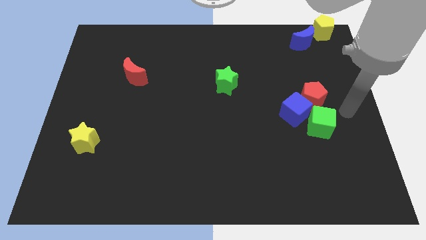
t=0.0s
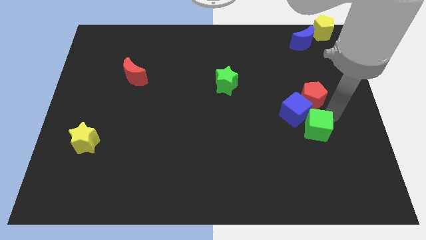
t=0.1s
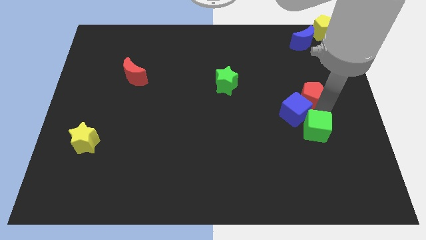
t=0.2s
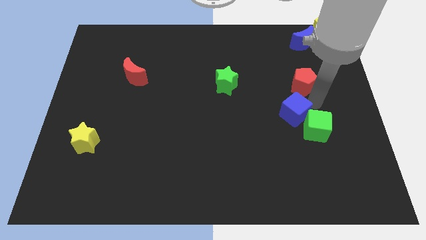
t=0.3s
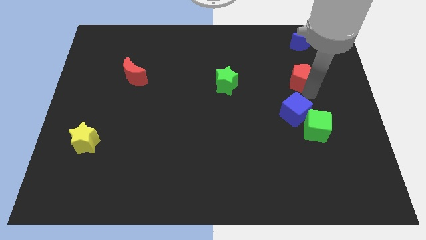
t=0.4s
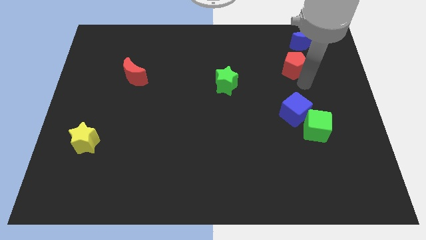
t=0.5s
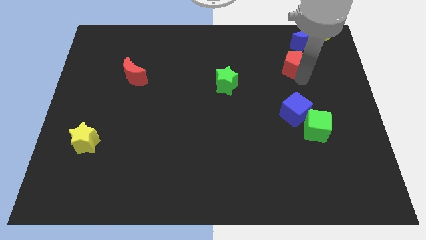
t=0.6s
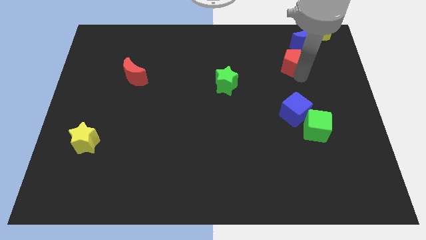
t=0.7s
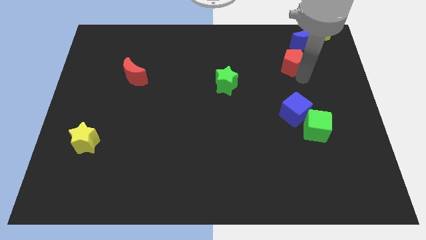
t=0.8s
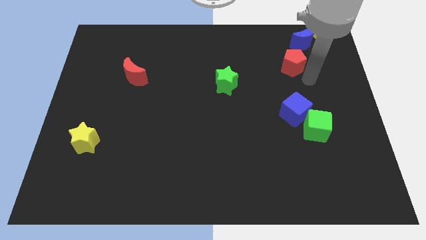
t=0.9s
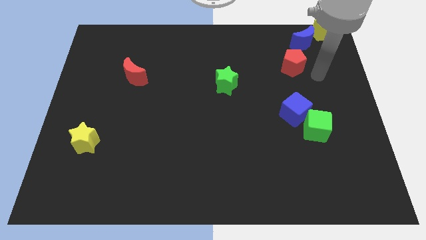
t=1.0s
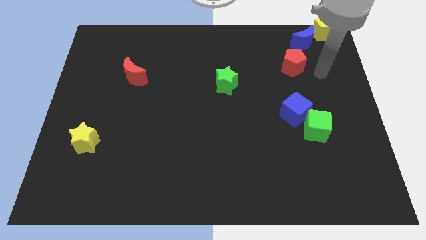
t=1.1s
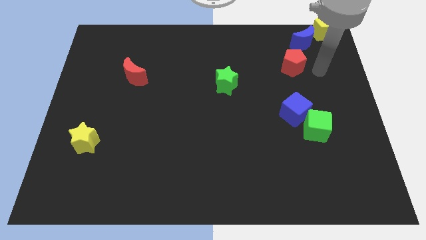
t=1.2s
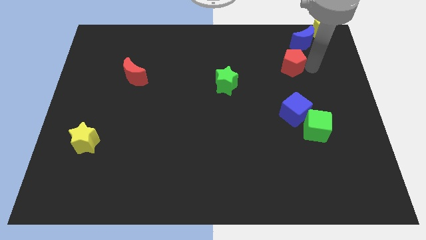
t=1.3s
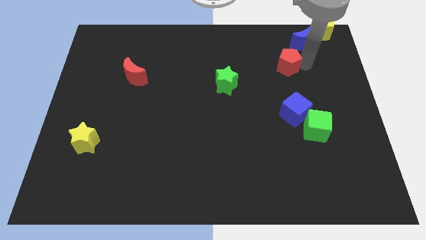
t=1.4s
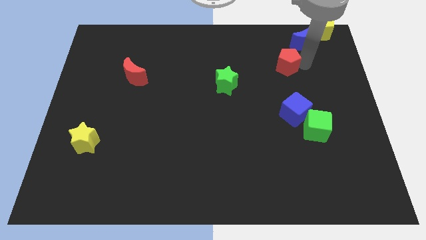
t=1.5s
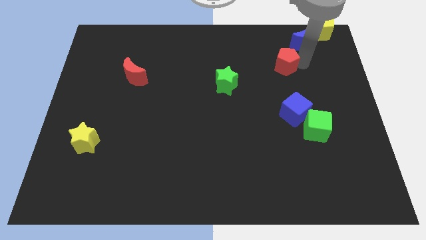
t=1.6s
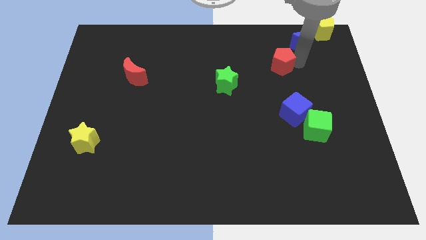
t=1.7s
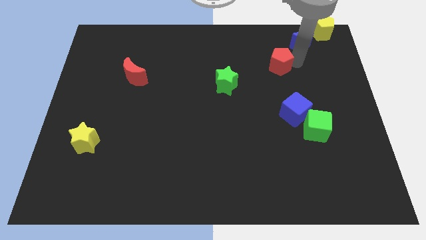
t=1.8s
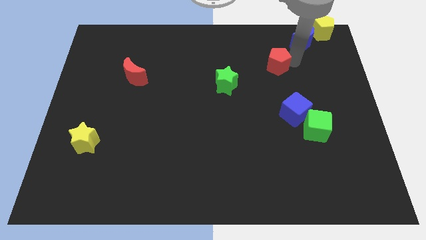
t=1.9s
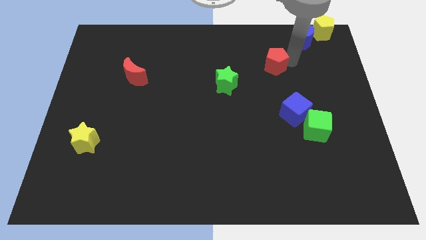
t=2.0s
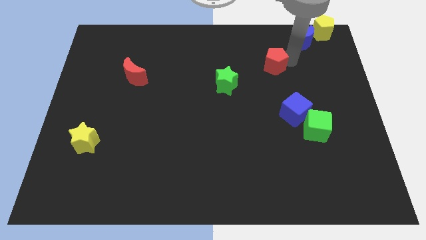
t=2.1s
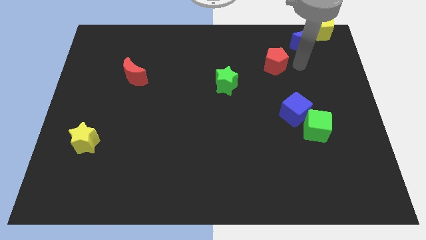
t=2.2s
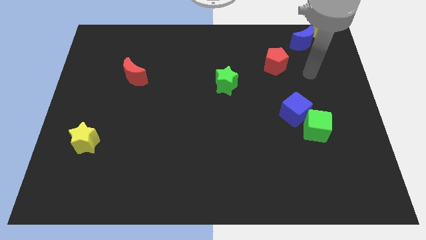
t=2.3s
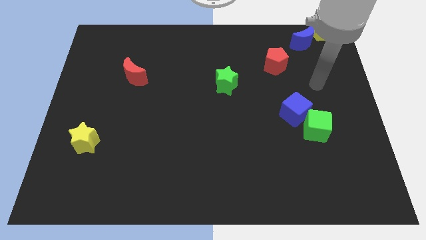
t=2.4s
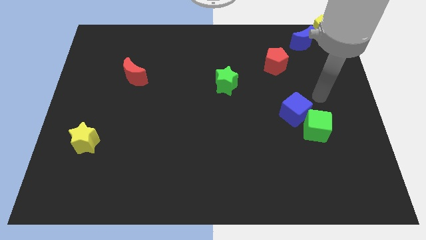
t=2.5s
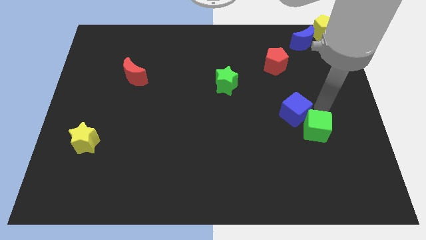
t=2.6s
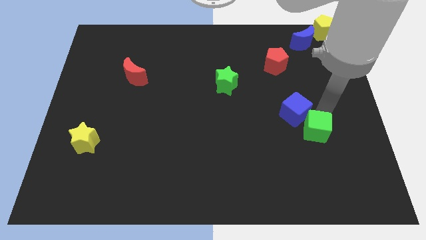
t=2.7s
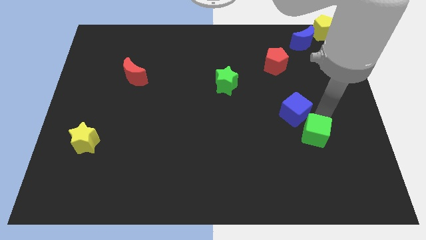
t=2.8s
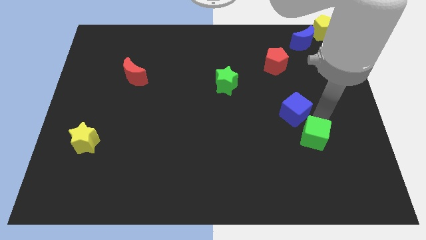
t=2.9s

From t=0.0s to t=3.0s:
push the red pentagon between green star and blue moon

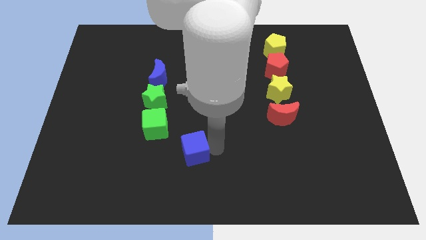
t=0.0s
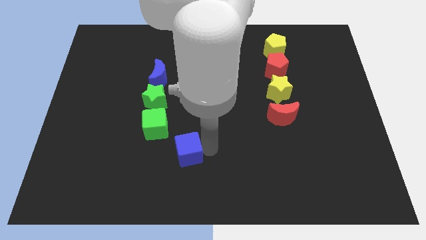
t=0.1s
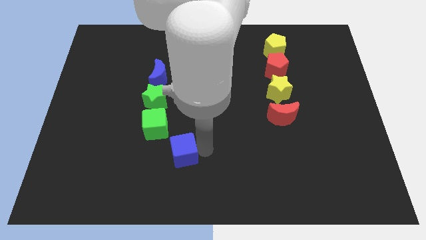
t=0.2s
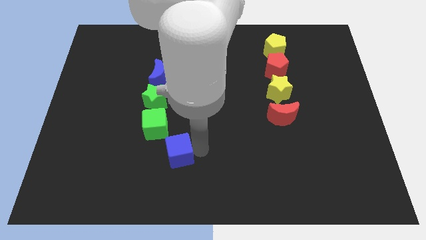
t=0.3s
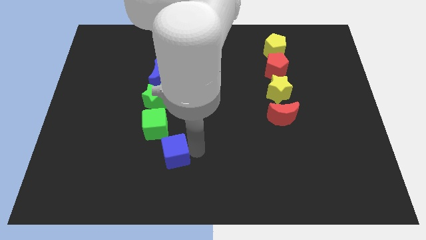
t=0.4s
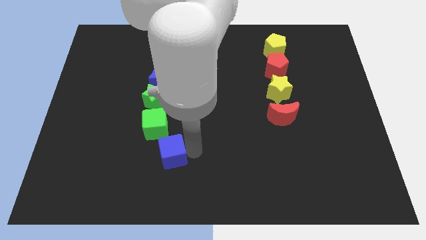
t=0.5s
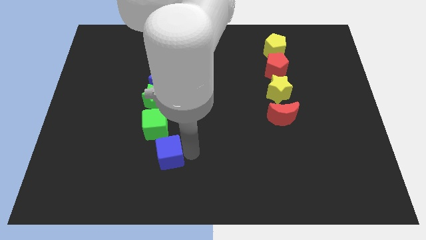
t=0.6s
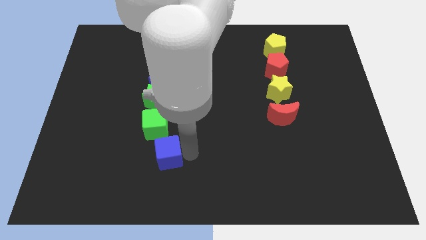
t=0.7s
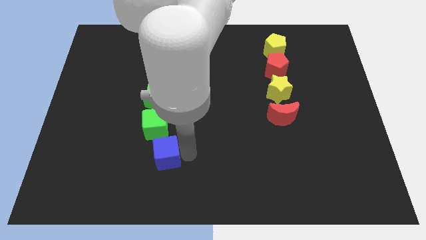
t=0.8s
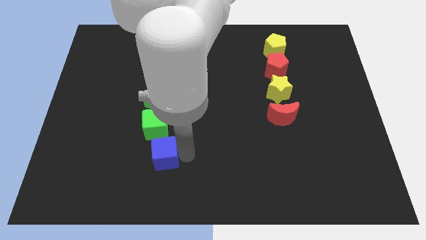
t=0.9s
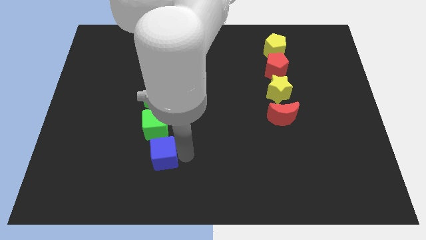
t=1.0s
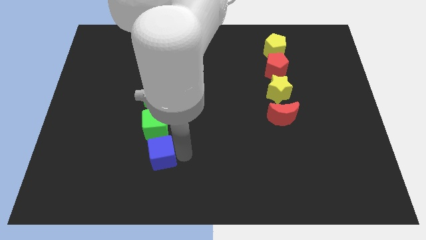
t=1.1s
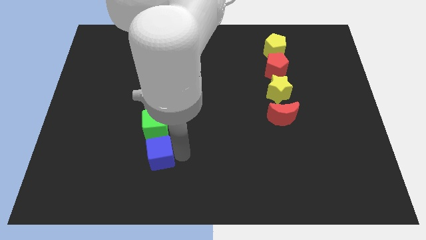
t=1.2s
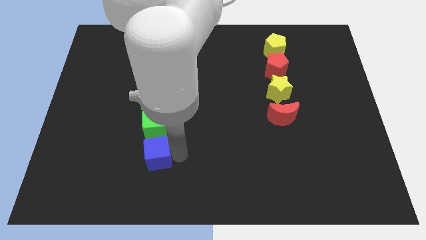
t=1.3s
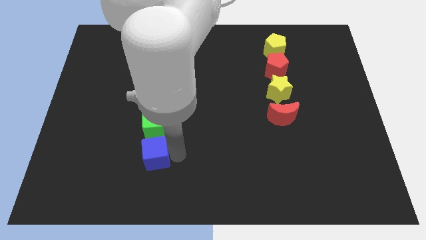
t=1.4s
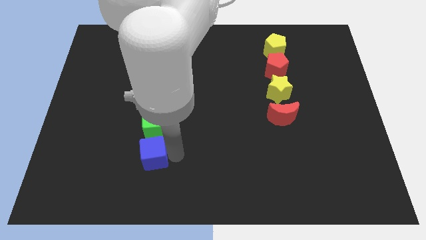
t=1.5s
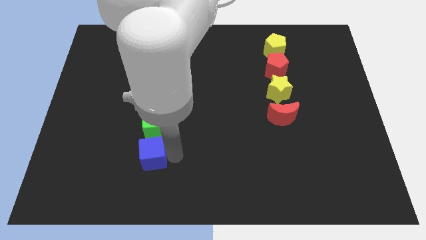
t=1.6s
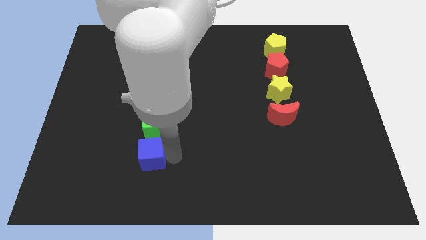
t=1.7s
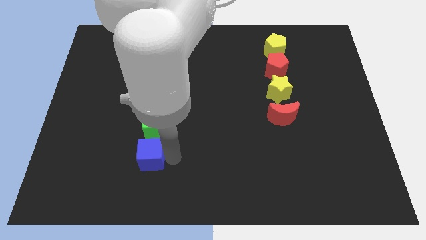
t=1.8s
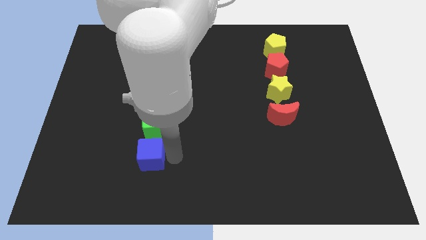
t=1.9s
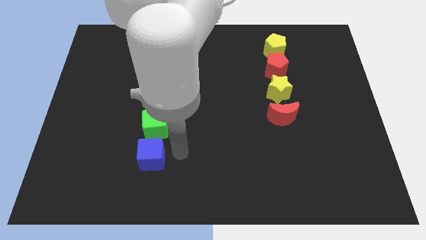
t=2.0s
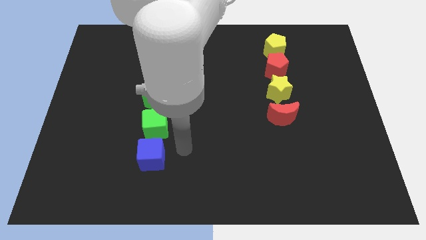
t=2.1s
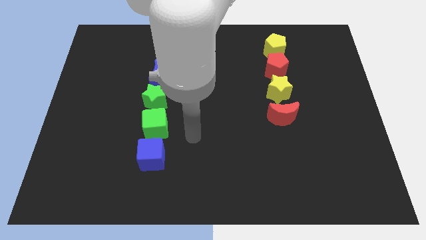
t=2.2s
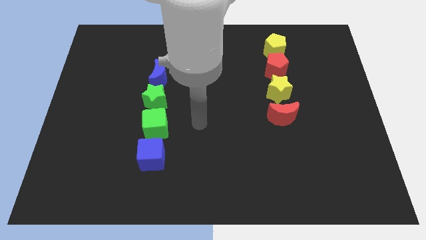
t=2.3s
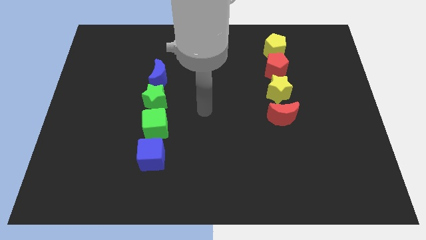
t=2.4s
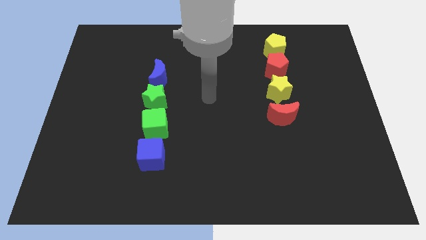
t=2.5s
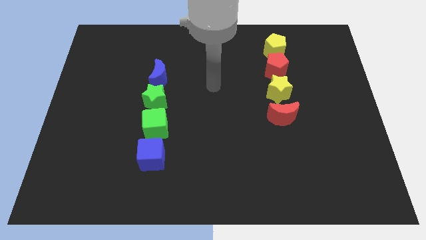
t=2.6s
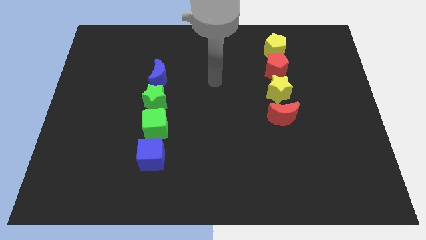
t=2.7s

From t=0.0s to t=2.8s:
push the blue cube slightly to the left of the board

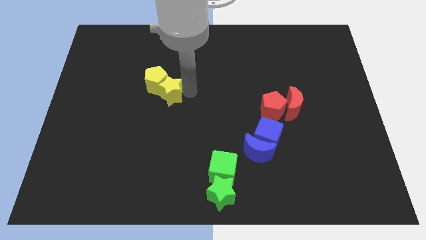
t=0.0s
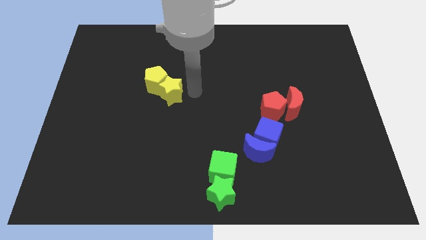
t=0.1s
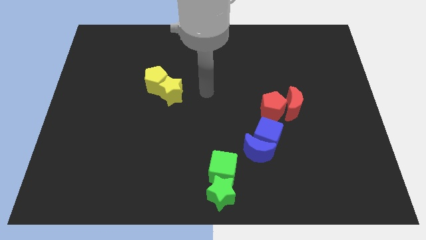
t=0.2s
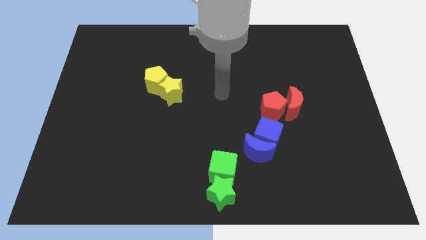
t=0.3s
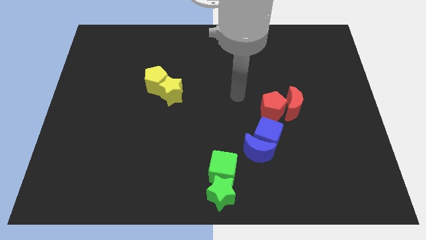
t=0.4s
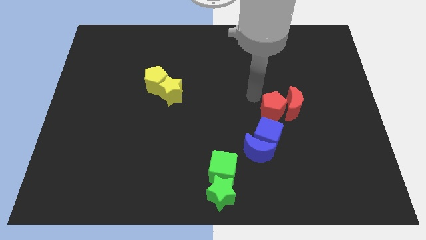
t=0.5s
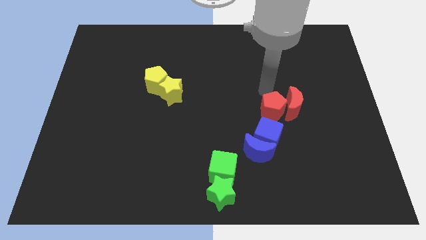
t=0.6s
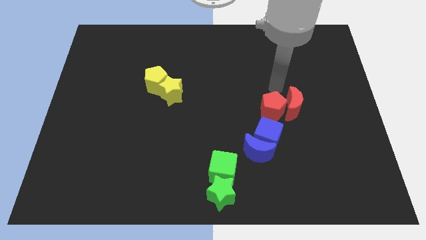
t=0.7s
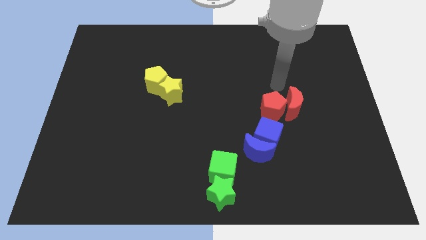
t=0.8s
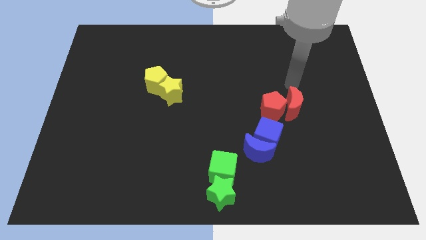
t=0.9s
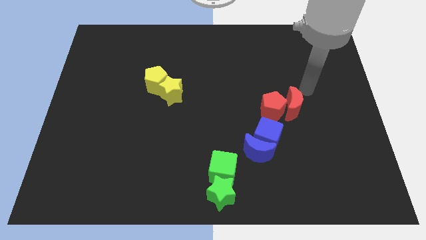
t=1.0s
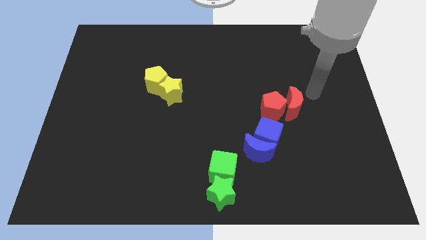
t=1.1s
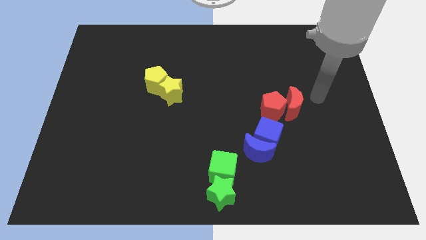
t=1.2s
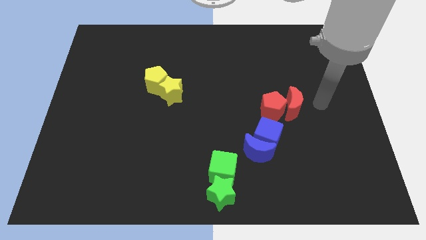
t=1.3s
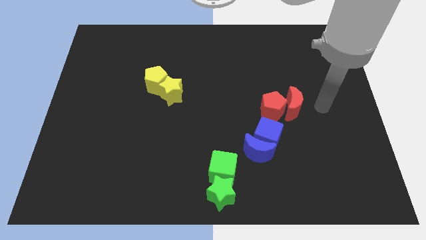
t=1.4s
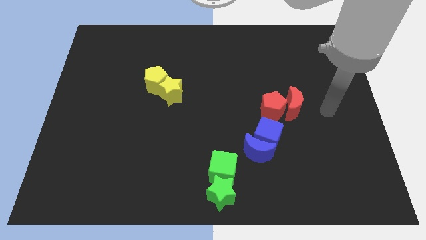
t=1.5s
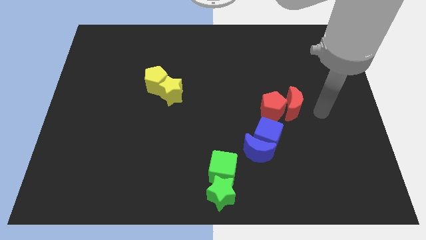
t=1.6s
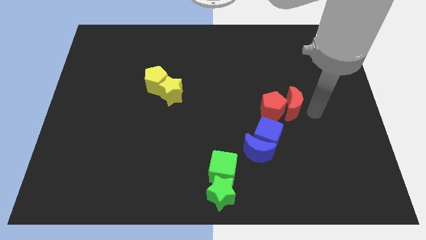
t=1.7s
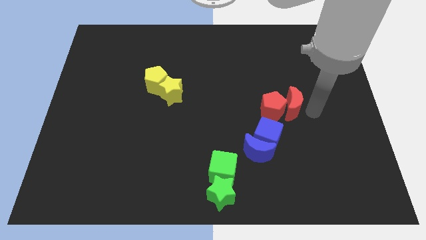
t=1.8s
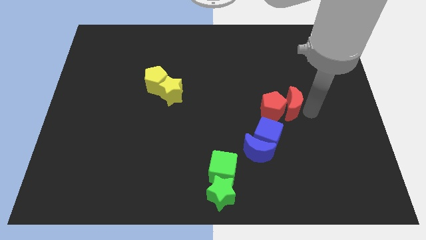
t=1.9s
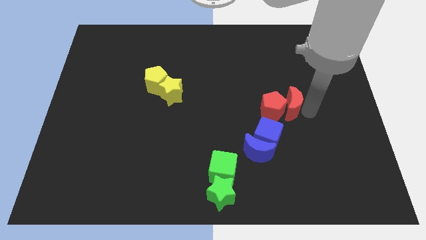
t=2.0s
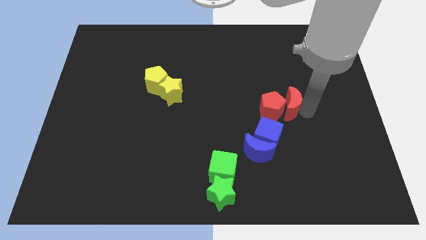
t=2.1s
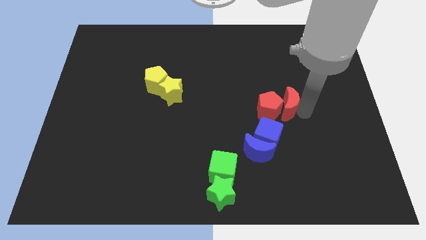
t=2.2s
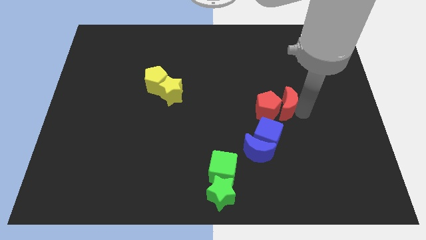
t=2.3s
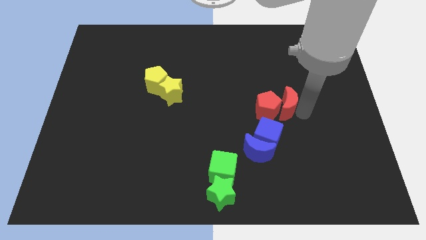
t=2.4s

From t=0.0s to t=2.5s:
push red crescent slightly to the left side

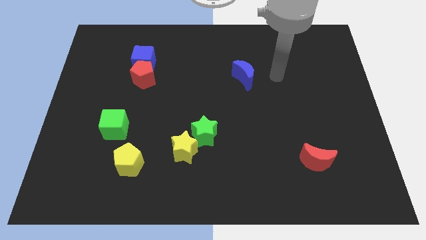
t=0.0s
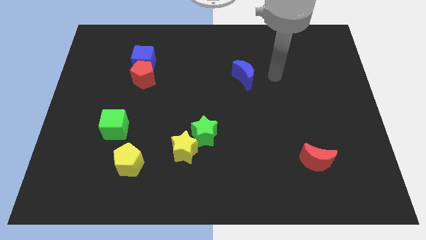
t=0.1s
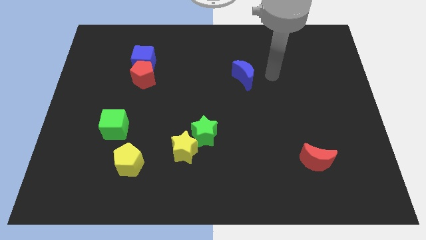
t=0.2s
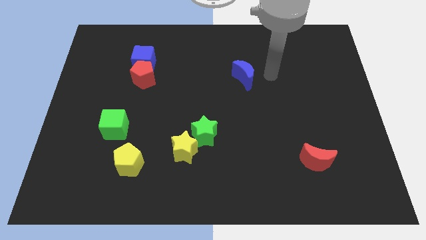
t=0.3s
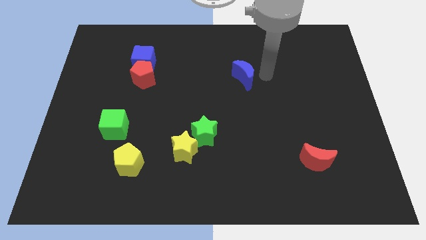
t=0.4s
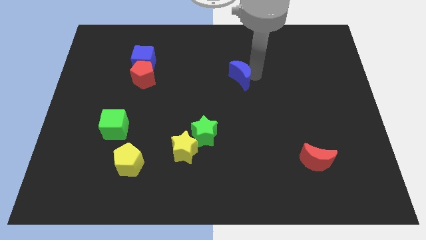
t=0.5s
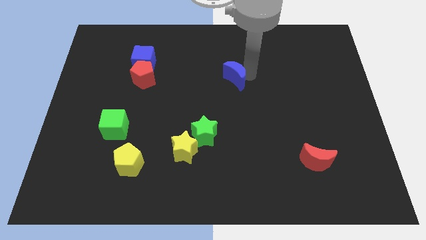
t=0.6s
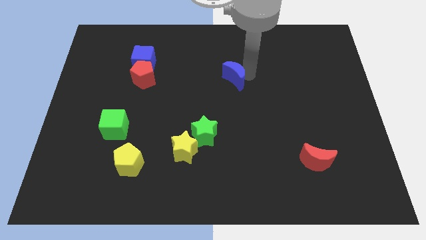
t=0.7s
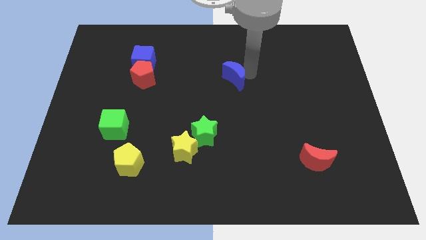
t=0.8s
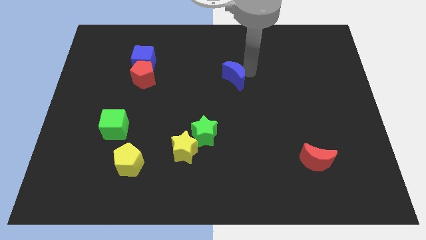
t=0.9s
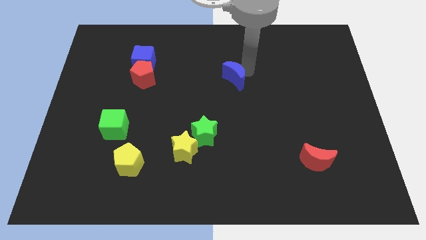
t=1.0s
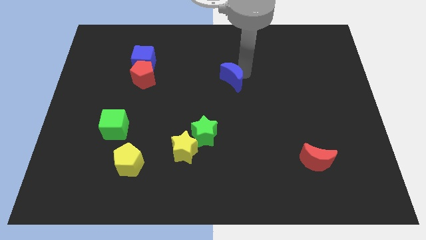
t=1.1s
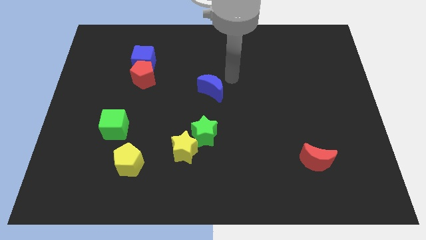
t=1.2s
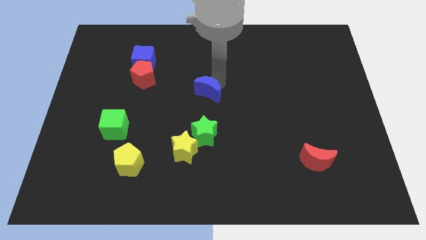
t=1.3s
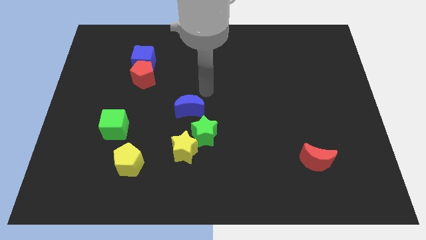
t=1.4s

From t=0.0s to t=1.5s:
put blue moon above green star
